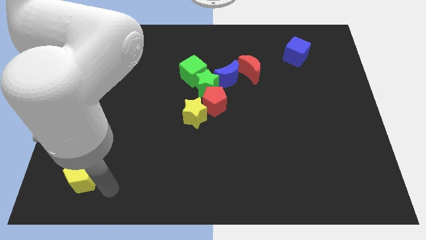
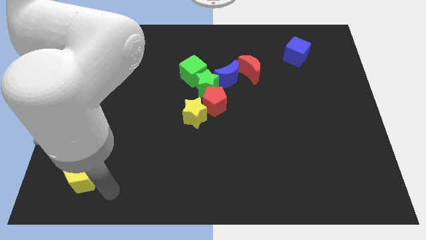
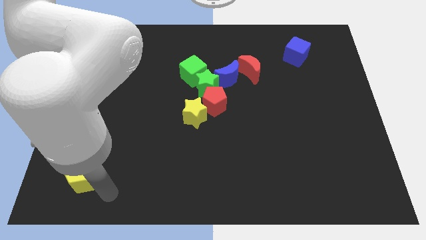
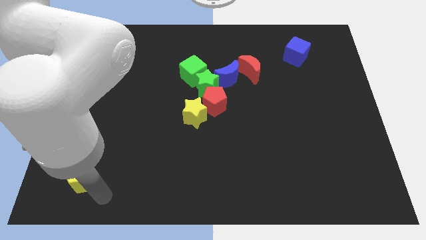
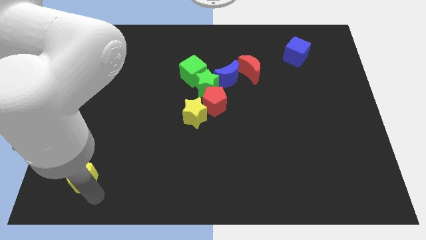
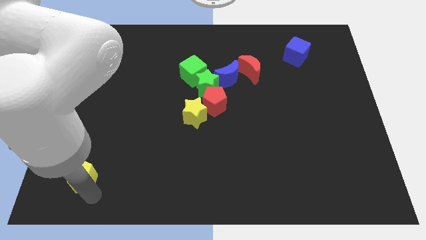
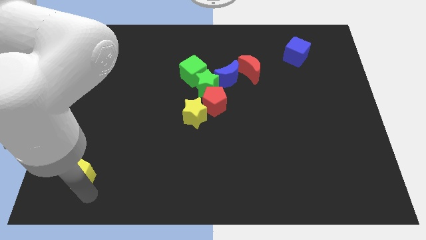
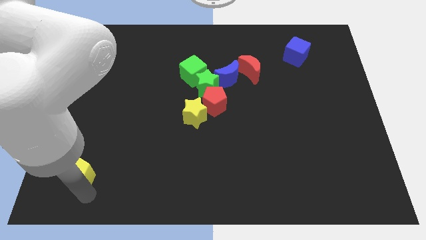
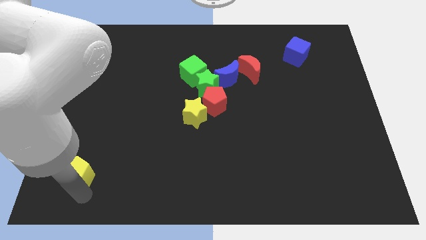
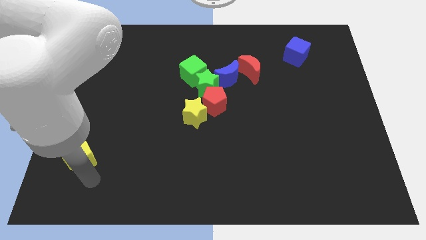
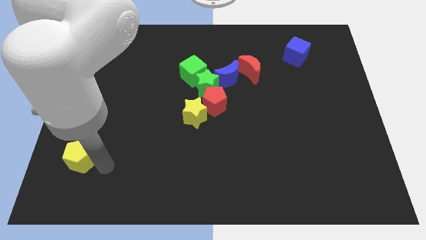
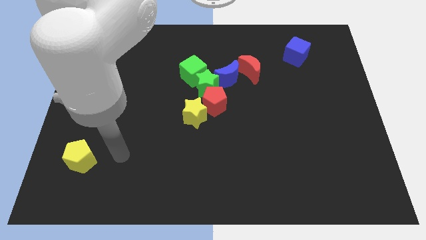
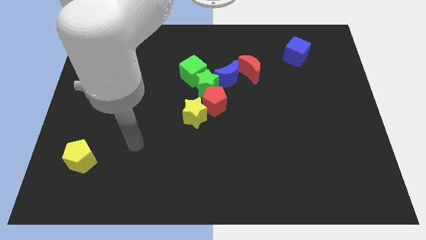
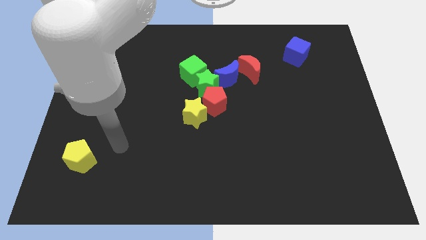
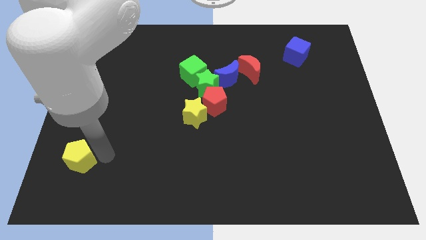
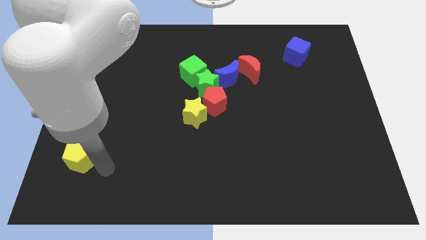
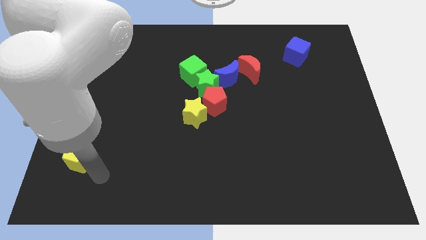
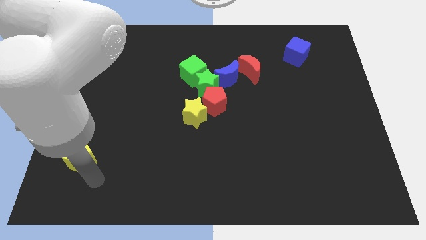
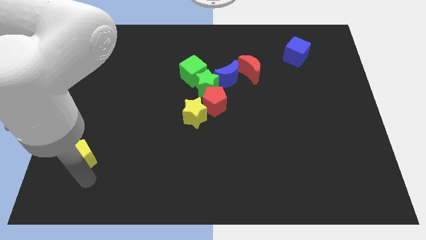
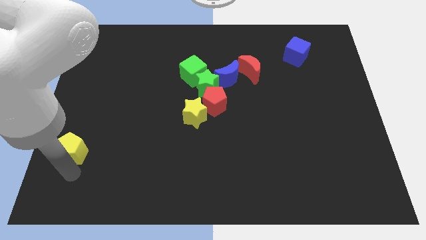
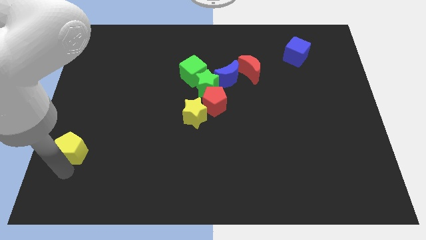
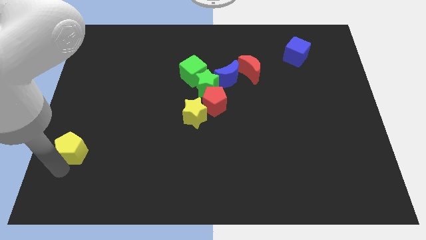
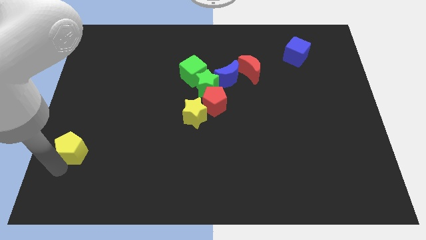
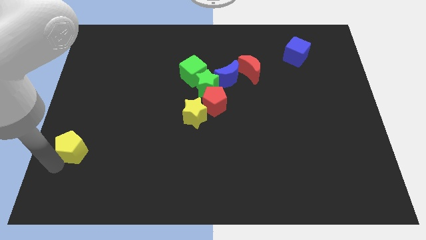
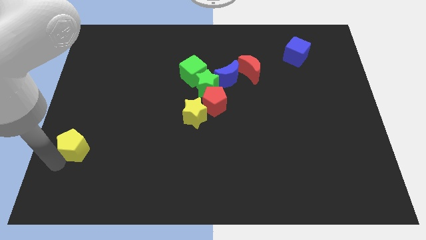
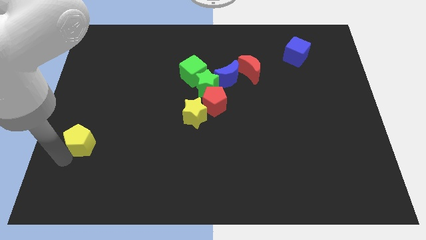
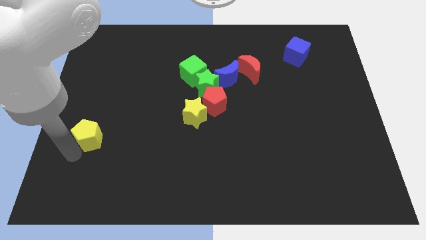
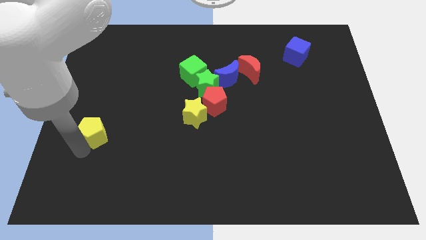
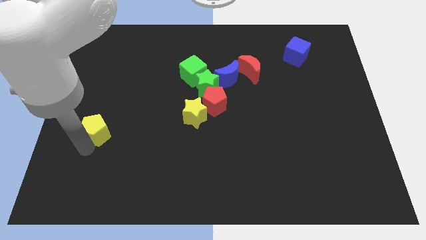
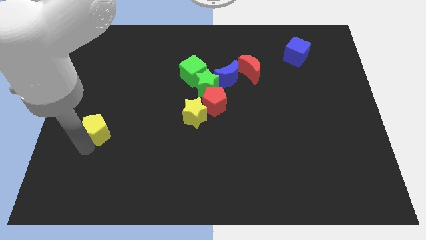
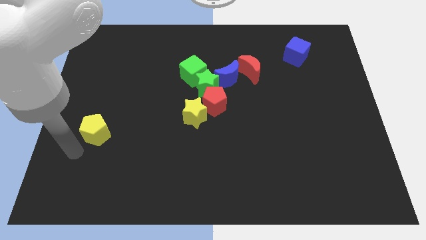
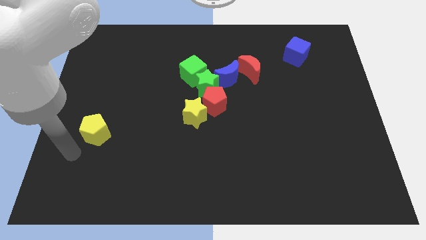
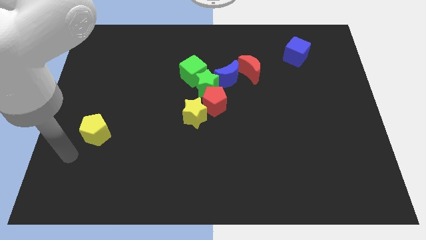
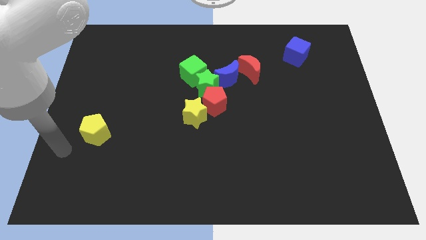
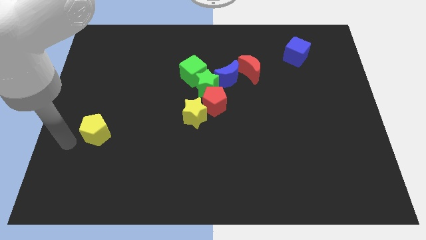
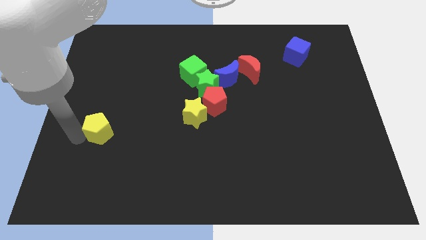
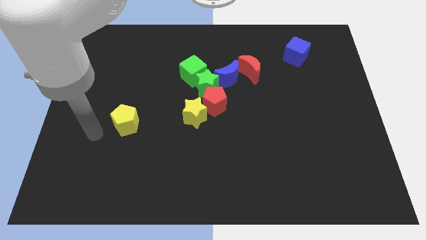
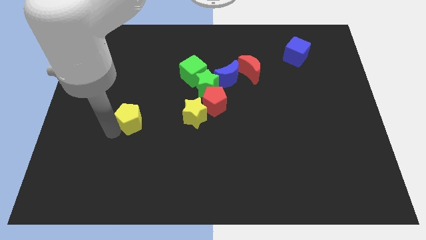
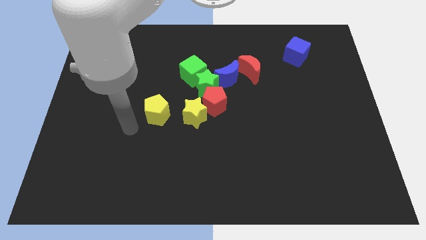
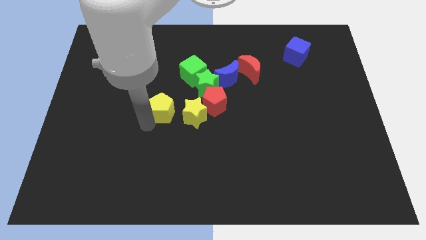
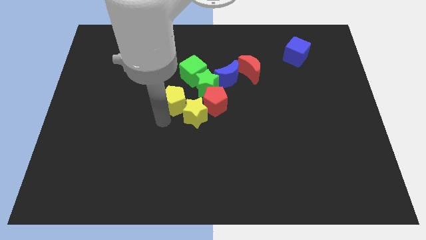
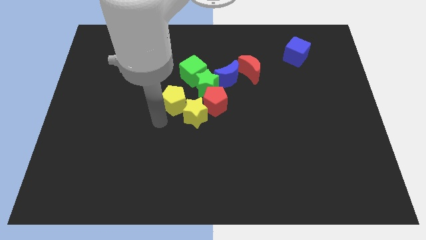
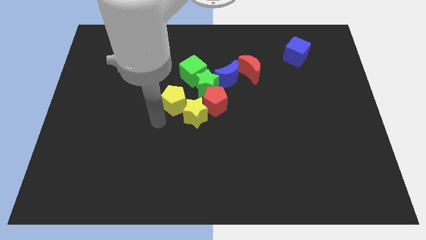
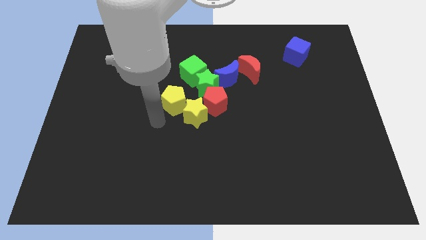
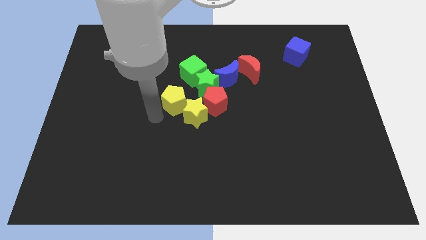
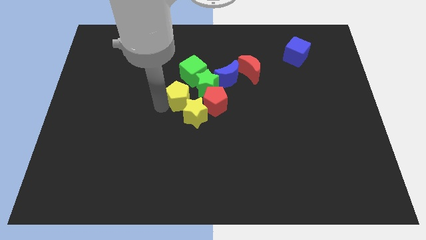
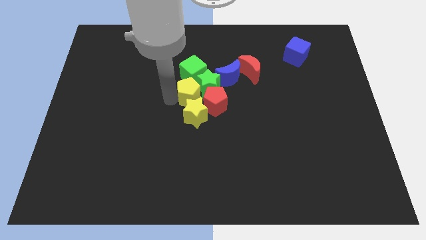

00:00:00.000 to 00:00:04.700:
place the yellow pentagon above the yellow star

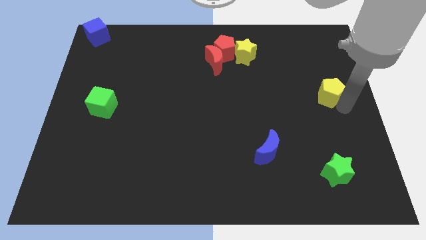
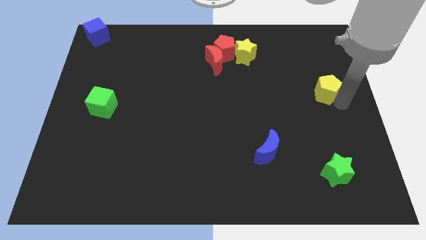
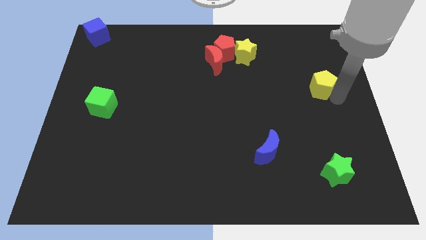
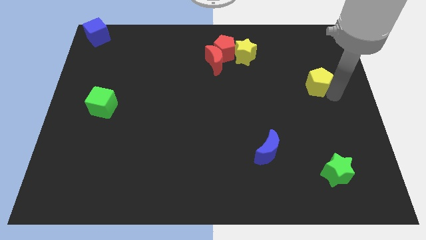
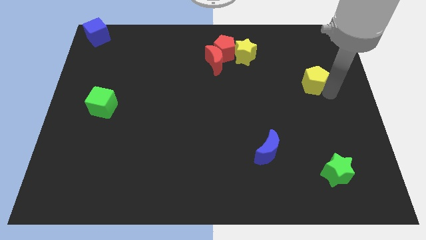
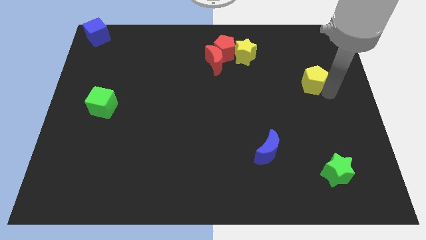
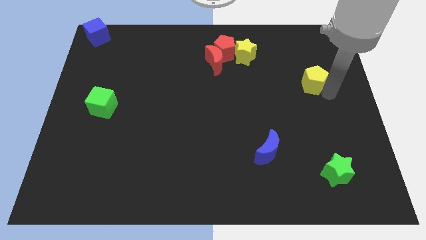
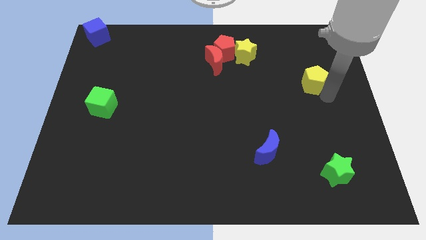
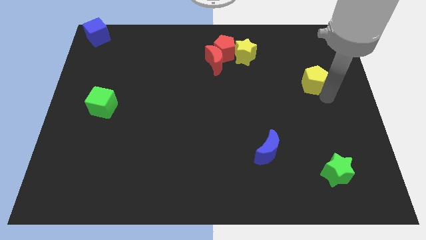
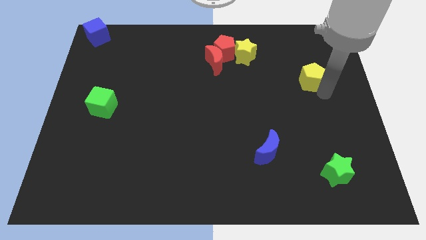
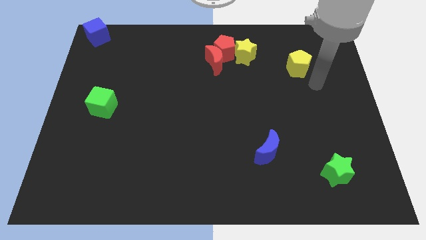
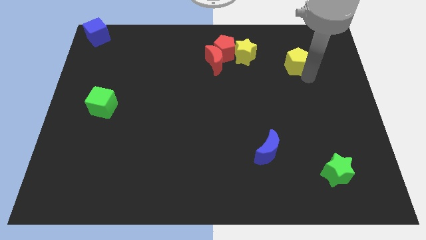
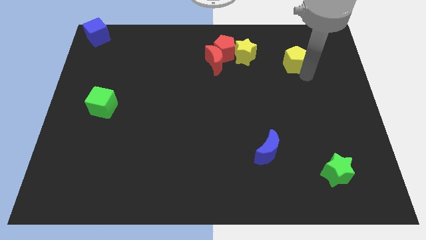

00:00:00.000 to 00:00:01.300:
push the yellow pentagon towards the yellow star

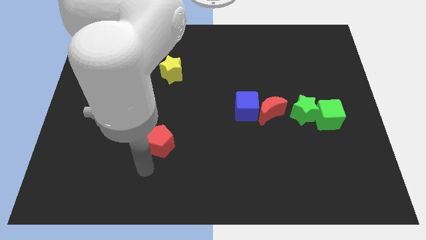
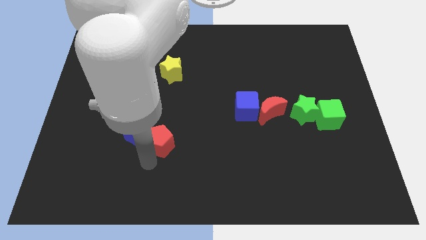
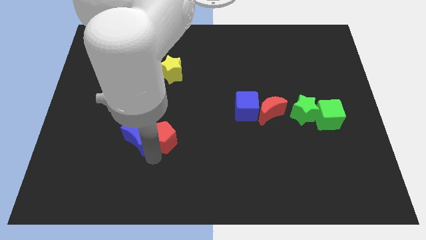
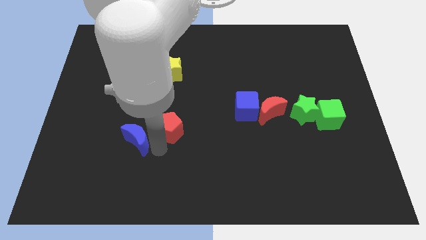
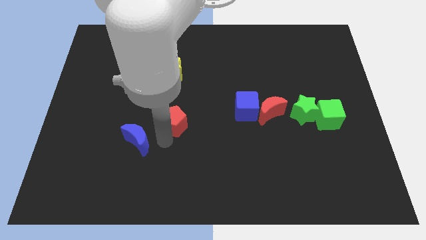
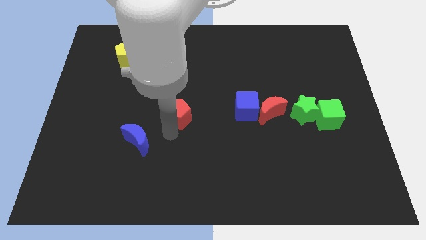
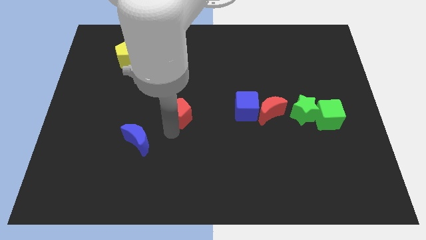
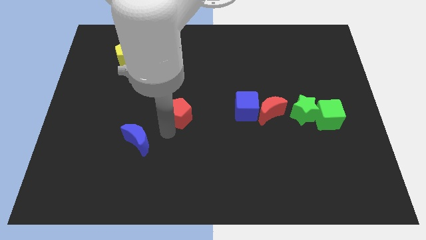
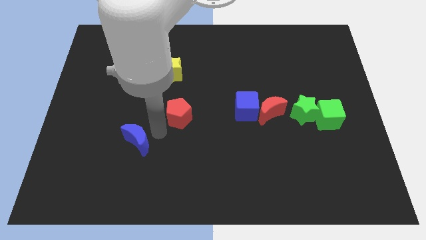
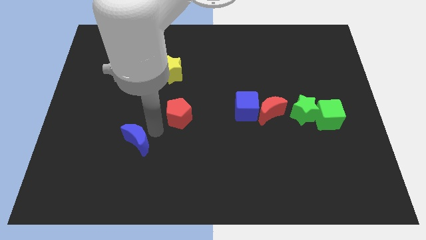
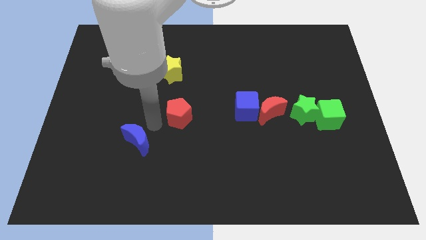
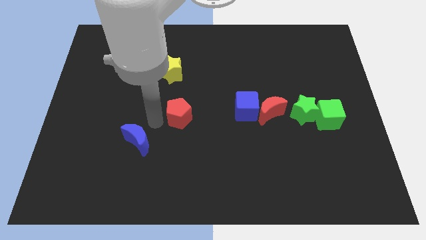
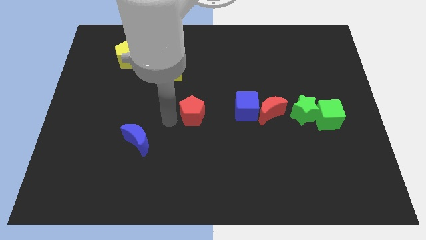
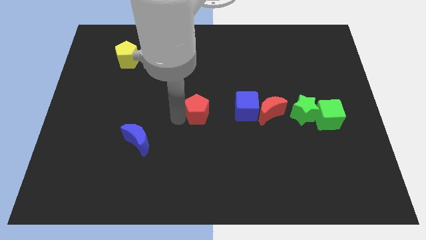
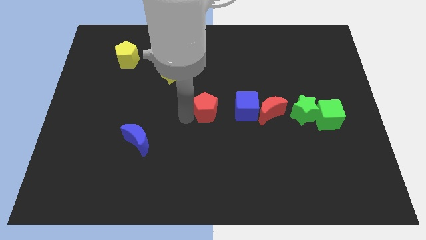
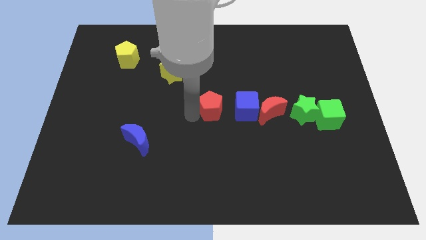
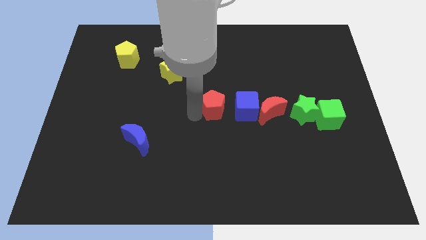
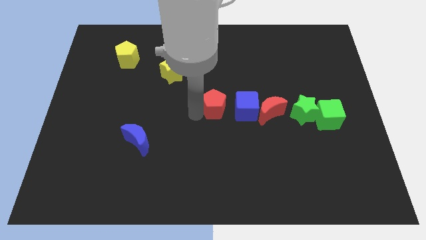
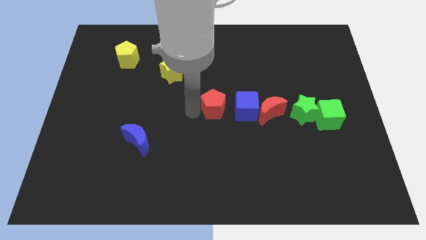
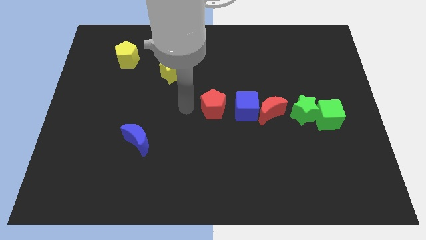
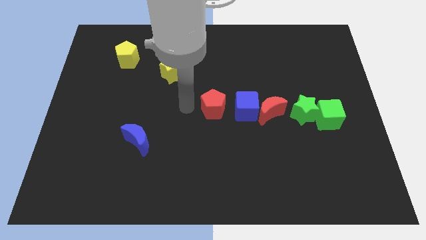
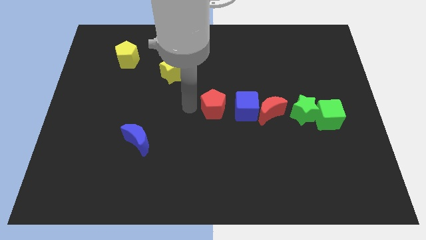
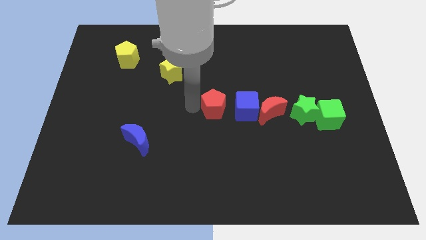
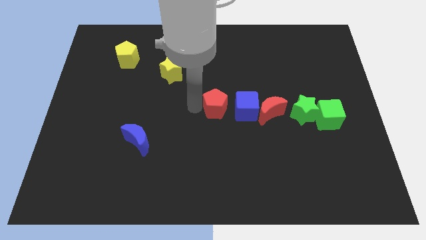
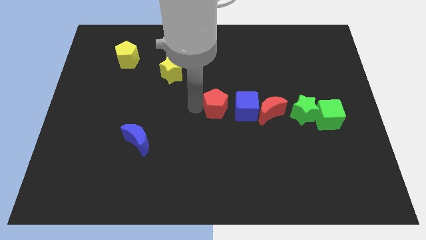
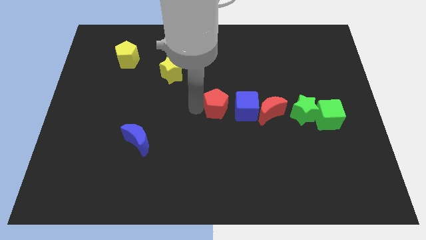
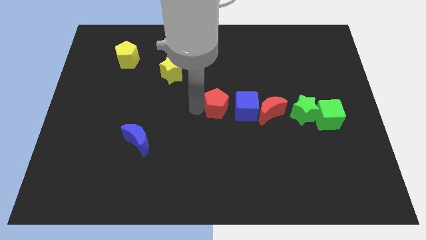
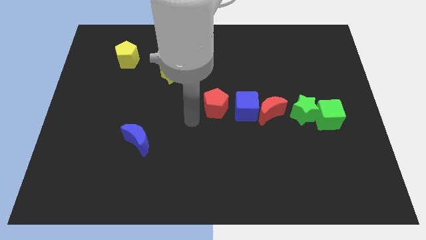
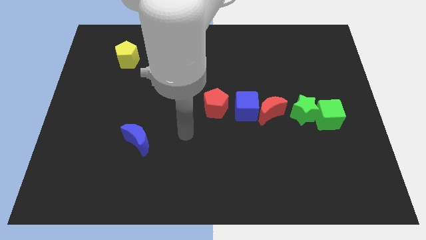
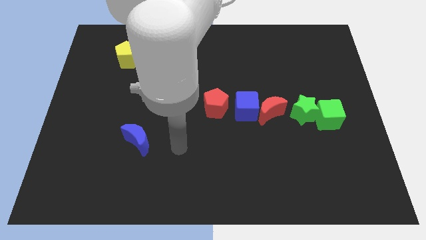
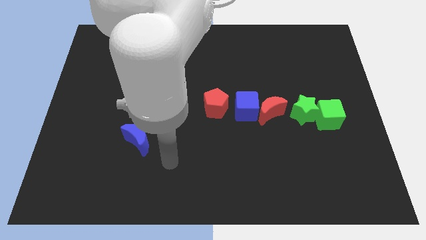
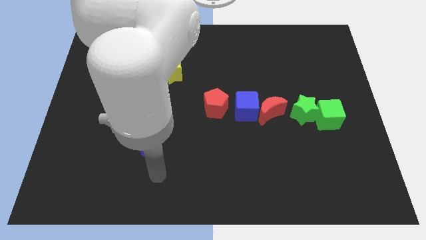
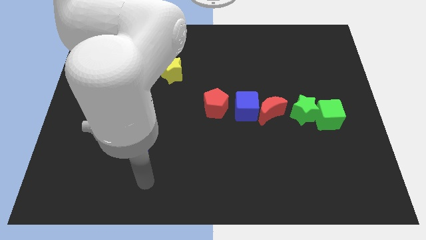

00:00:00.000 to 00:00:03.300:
push the red pentagon left to blue cube
